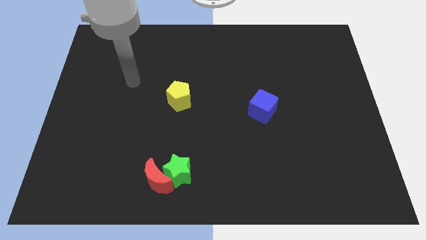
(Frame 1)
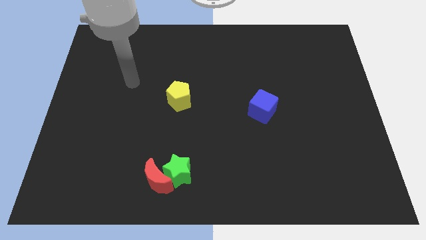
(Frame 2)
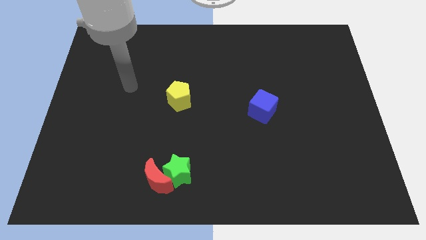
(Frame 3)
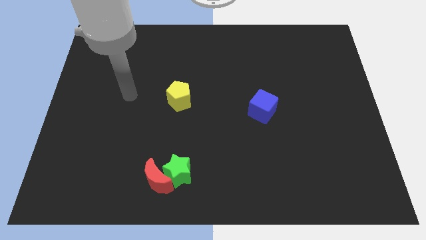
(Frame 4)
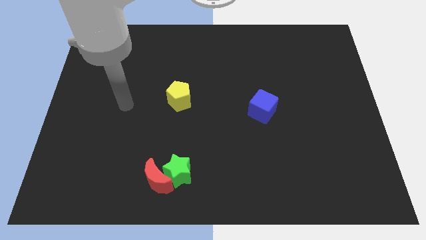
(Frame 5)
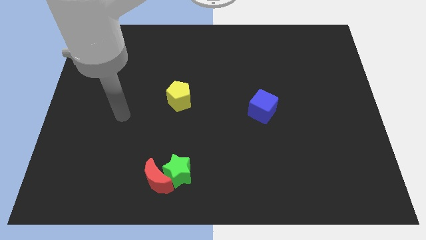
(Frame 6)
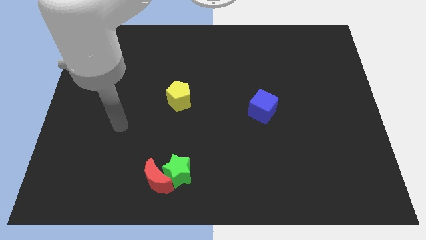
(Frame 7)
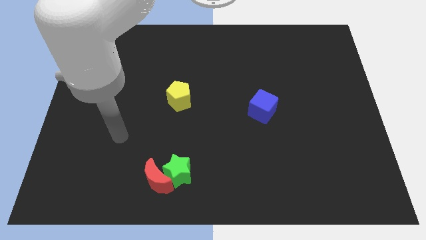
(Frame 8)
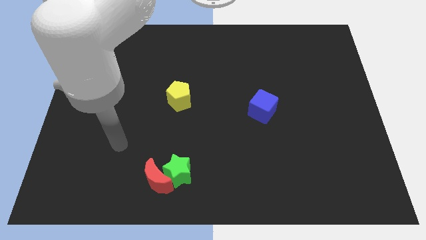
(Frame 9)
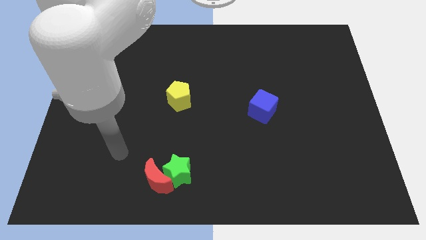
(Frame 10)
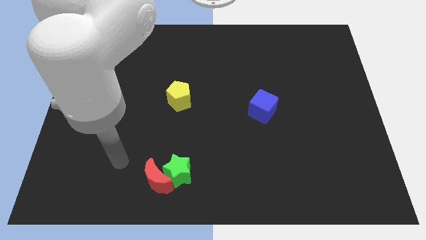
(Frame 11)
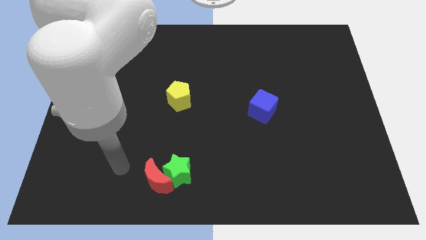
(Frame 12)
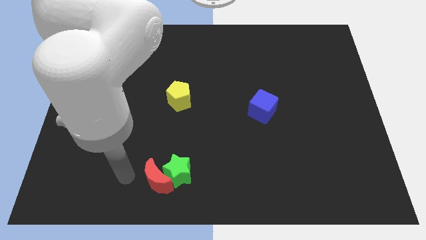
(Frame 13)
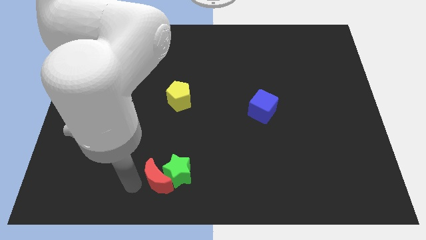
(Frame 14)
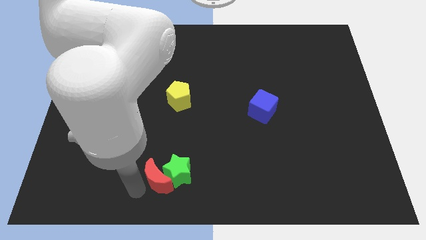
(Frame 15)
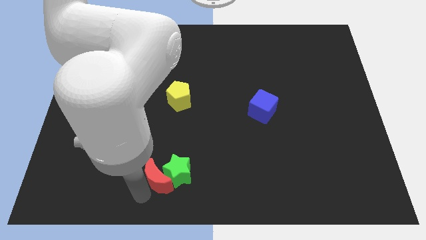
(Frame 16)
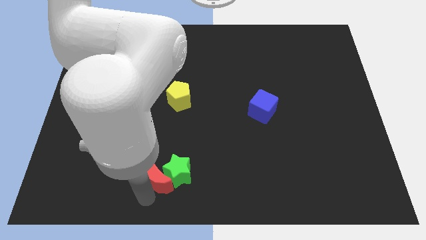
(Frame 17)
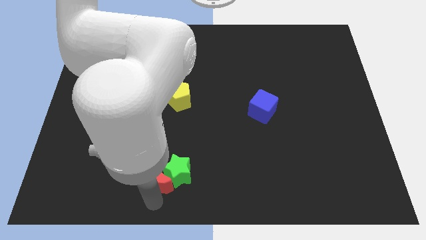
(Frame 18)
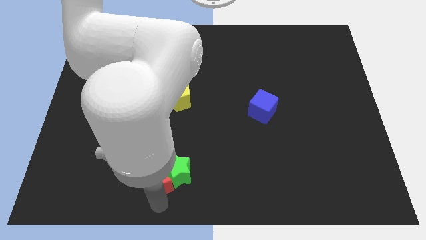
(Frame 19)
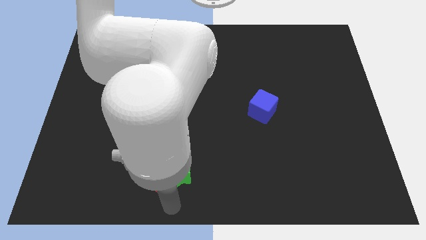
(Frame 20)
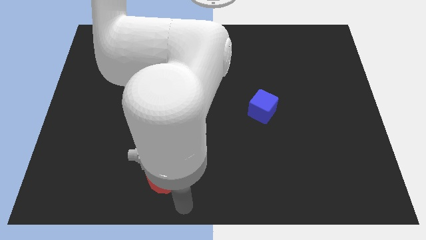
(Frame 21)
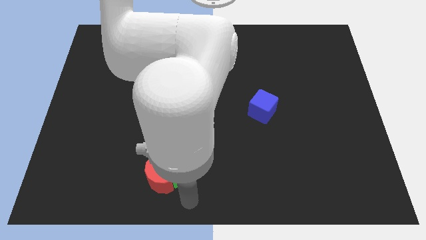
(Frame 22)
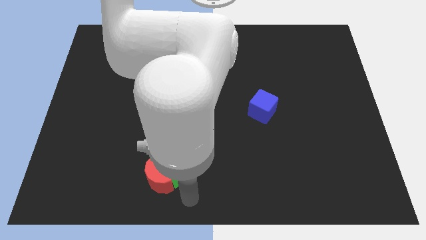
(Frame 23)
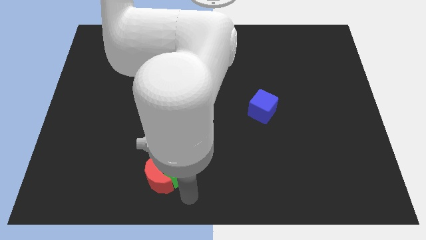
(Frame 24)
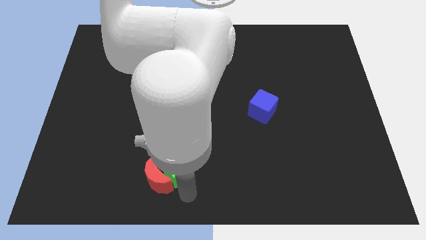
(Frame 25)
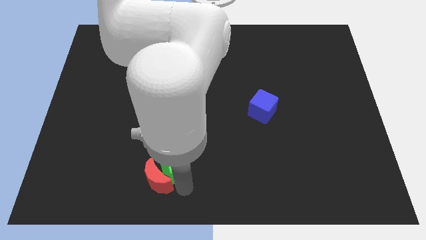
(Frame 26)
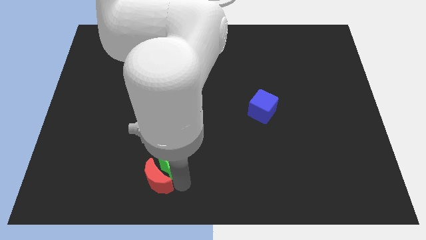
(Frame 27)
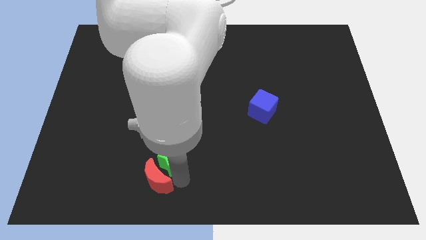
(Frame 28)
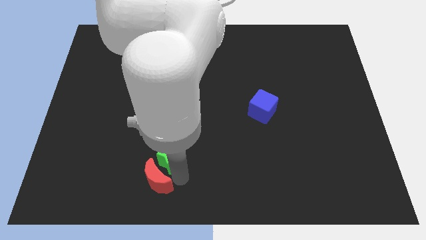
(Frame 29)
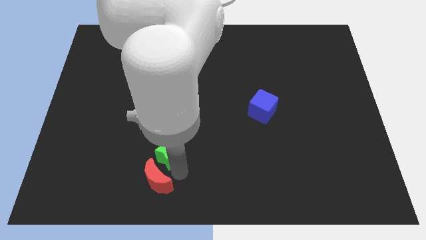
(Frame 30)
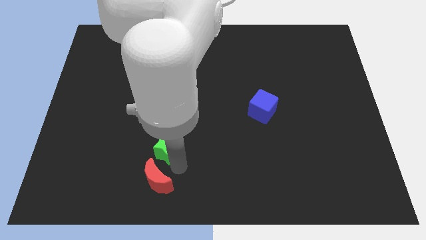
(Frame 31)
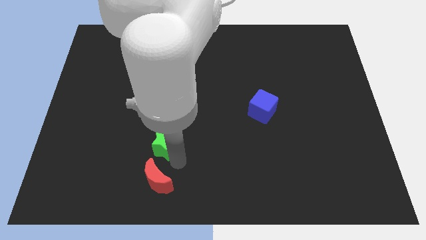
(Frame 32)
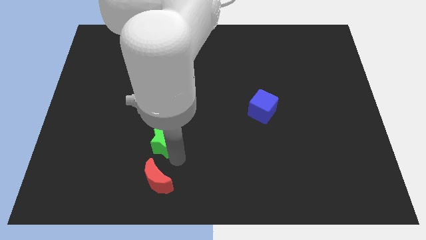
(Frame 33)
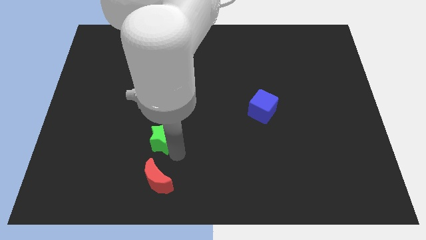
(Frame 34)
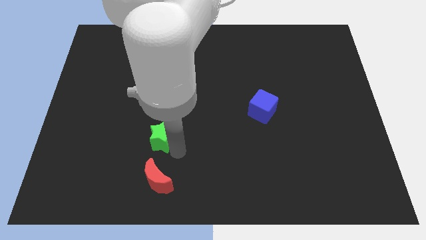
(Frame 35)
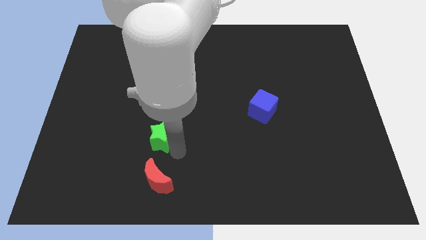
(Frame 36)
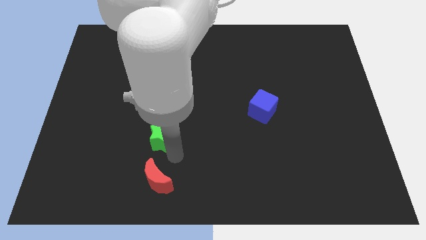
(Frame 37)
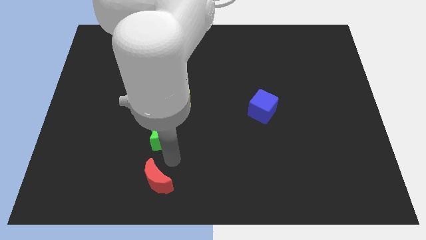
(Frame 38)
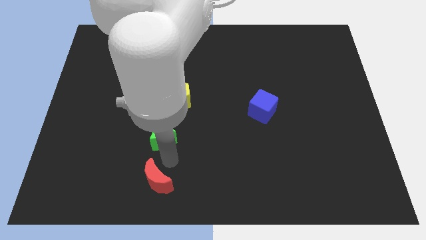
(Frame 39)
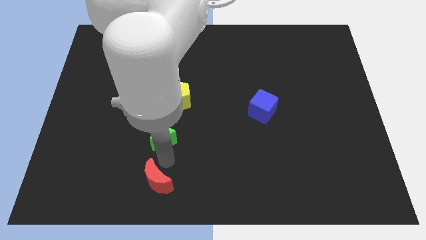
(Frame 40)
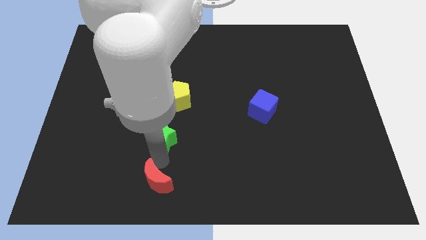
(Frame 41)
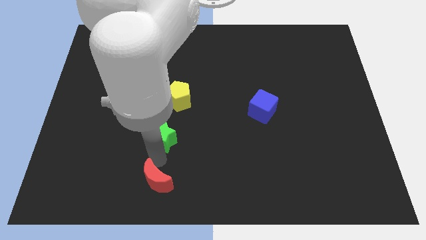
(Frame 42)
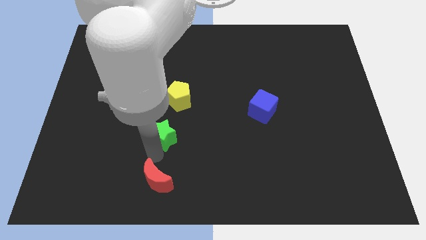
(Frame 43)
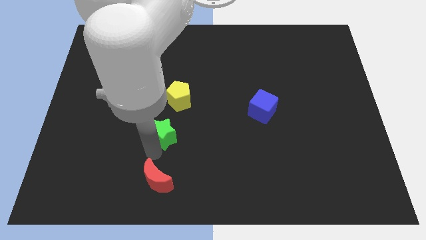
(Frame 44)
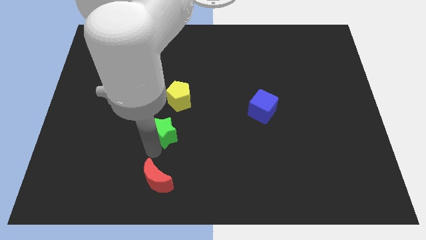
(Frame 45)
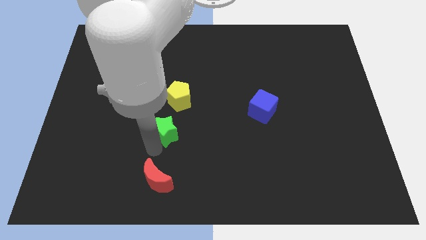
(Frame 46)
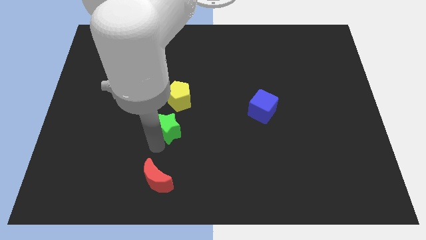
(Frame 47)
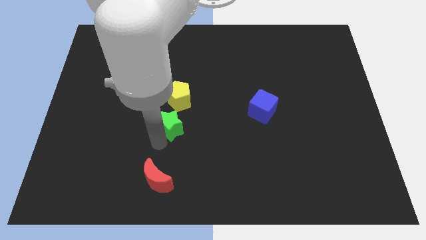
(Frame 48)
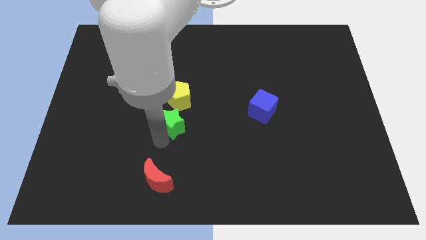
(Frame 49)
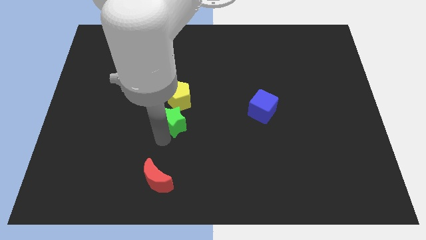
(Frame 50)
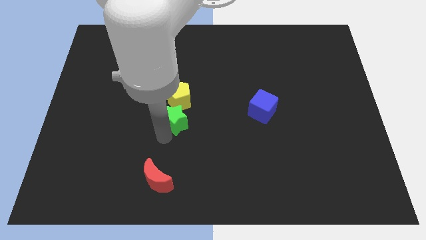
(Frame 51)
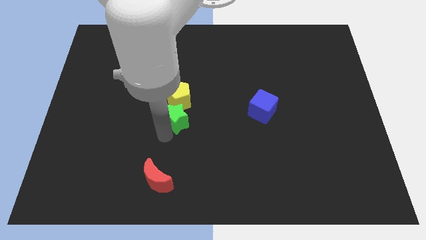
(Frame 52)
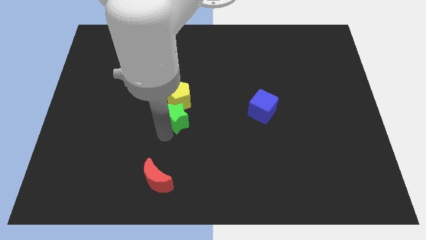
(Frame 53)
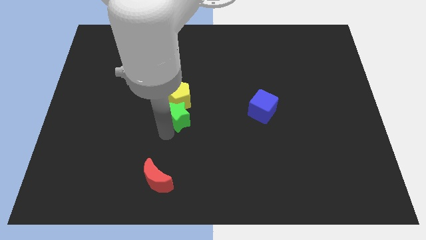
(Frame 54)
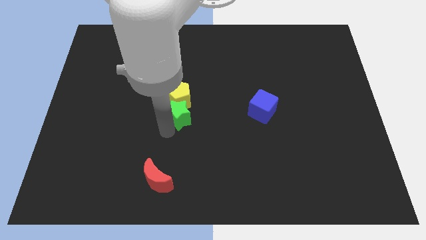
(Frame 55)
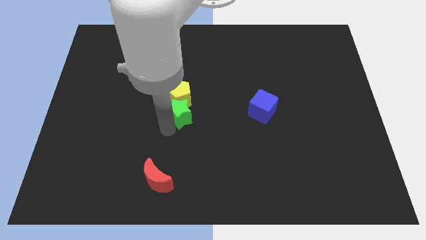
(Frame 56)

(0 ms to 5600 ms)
move the green block next to the yellow block

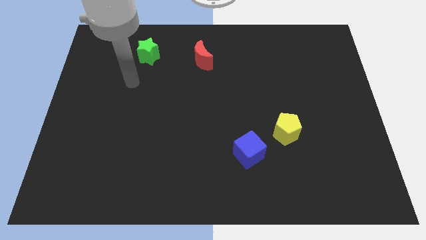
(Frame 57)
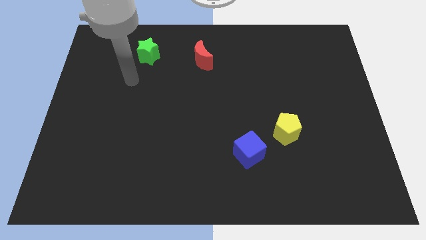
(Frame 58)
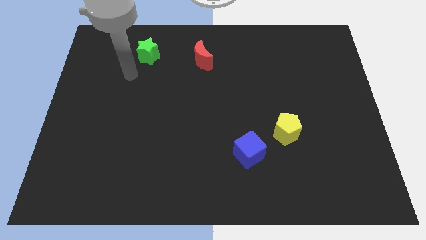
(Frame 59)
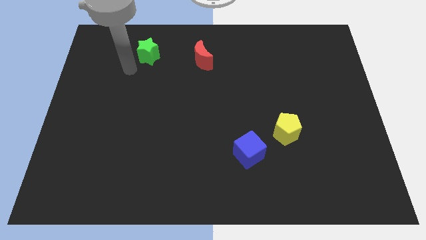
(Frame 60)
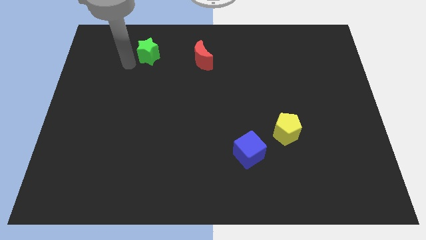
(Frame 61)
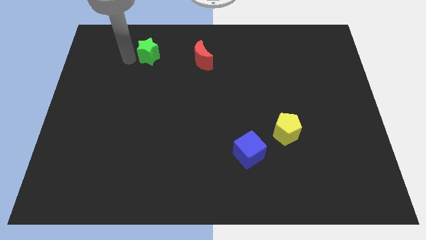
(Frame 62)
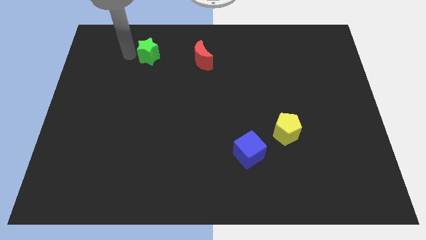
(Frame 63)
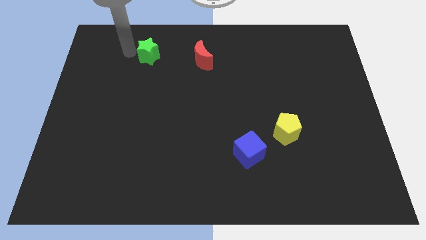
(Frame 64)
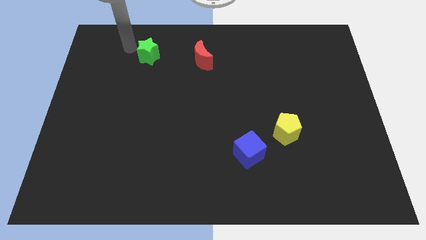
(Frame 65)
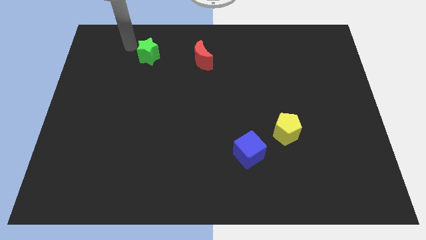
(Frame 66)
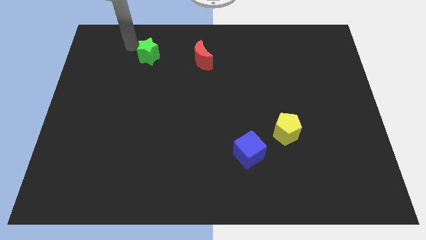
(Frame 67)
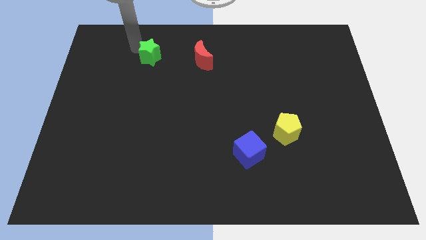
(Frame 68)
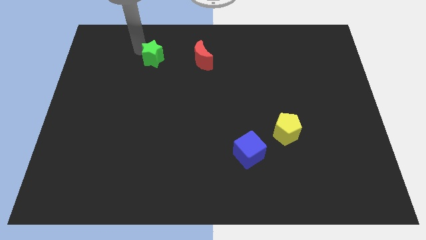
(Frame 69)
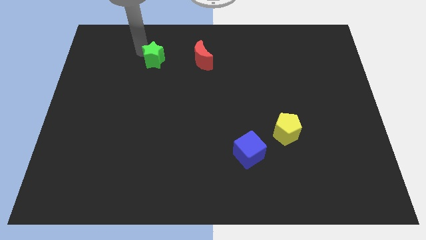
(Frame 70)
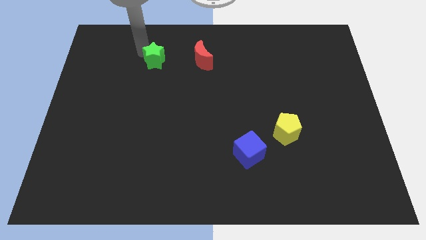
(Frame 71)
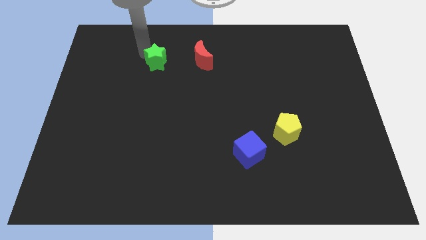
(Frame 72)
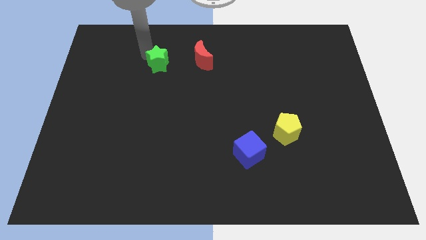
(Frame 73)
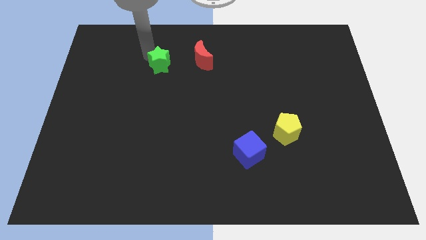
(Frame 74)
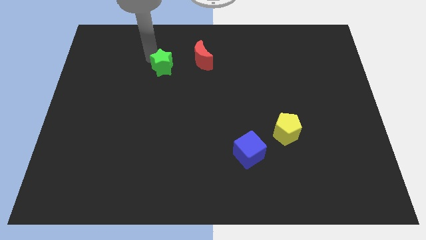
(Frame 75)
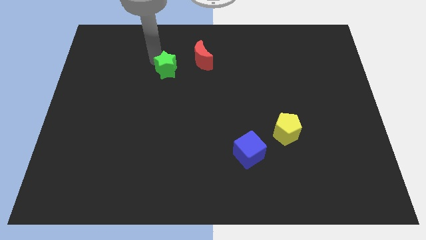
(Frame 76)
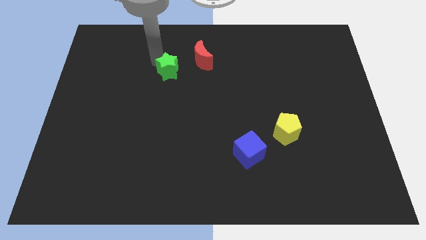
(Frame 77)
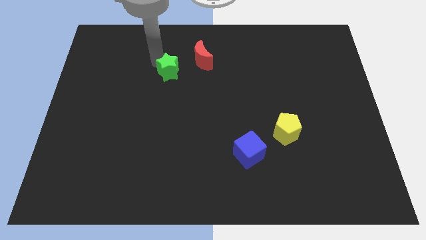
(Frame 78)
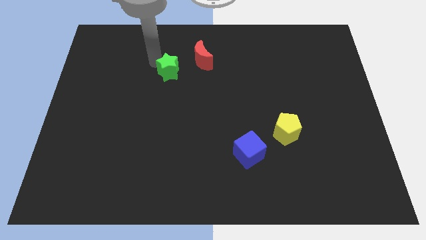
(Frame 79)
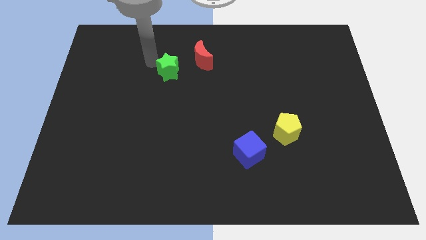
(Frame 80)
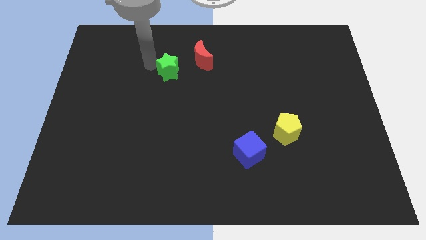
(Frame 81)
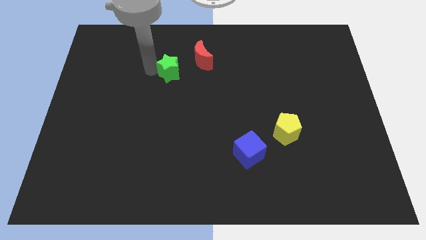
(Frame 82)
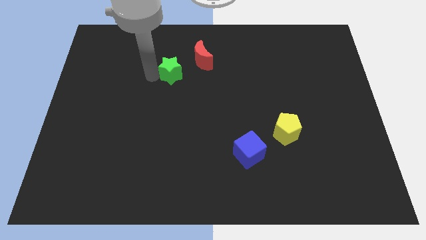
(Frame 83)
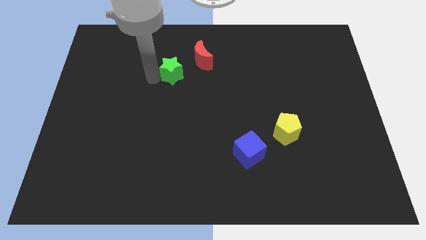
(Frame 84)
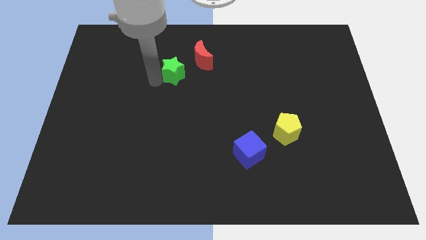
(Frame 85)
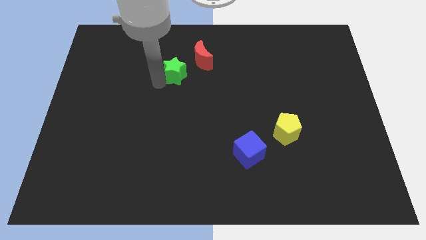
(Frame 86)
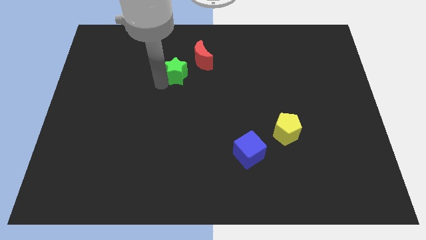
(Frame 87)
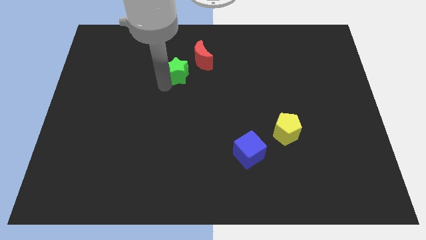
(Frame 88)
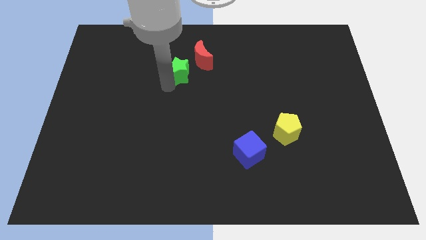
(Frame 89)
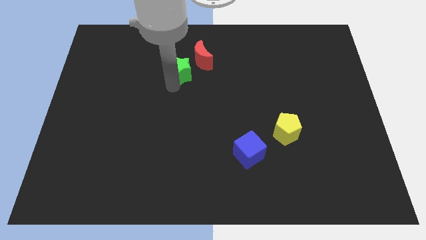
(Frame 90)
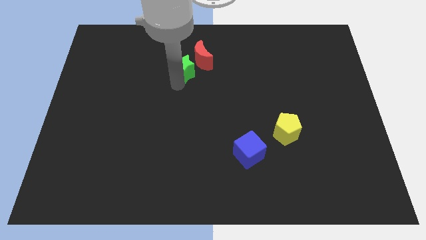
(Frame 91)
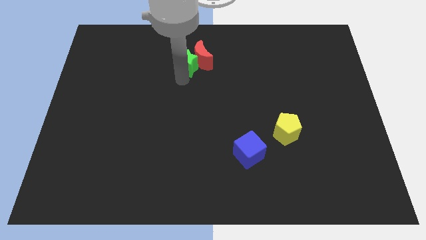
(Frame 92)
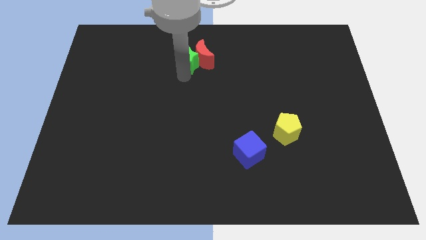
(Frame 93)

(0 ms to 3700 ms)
slide the green star next to the moon
